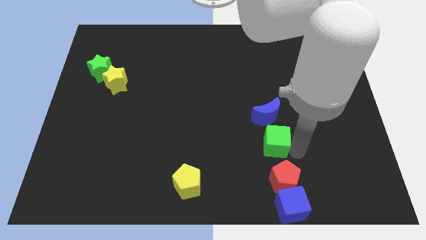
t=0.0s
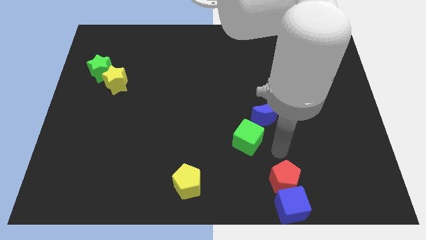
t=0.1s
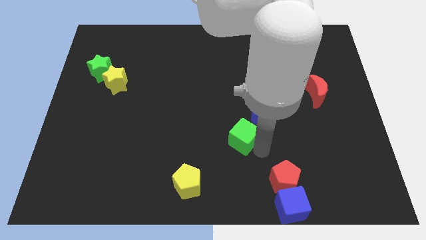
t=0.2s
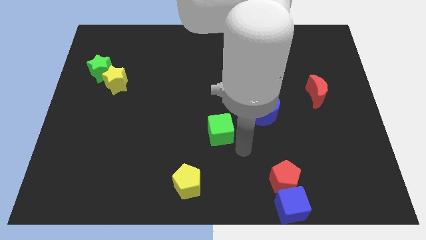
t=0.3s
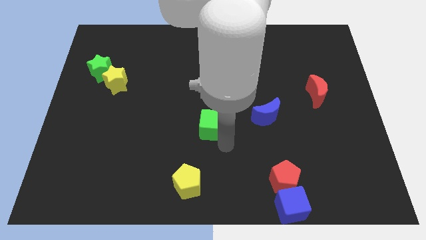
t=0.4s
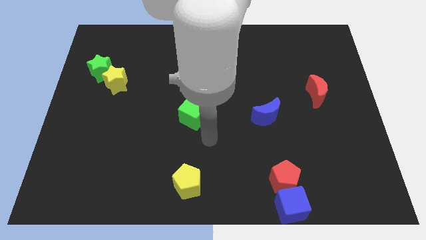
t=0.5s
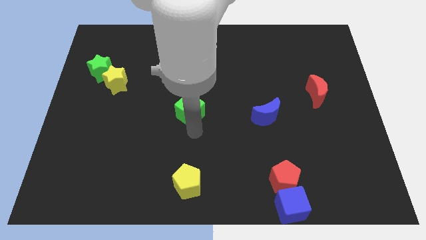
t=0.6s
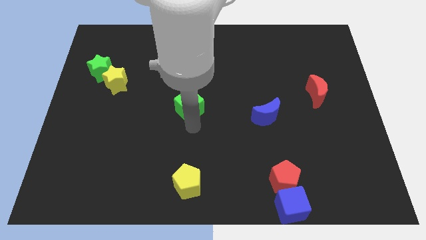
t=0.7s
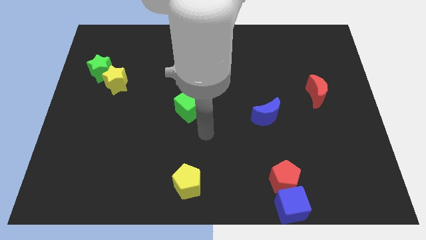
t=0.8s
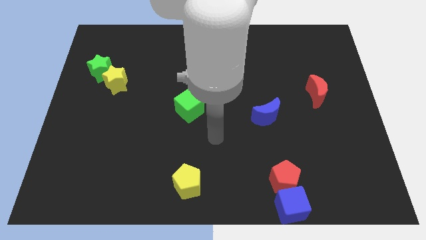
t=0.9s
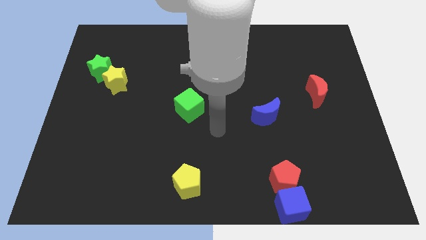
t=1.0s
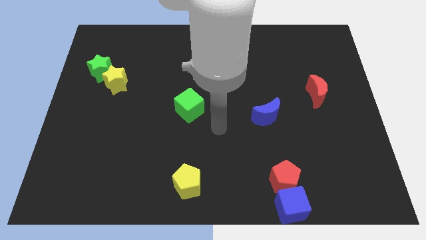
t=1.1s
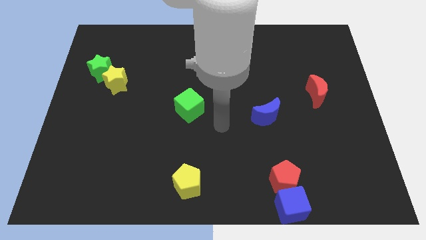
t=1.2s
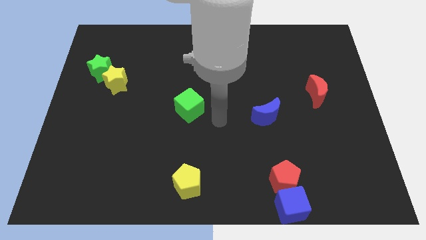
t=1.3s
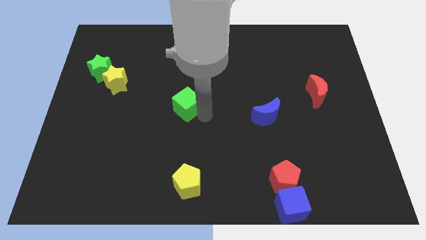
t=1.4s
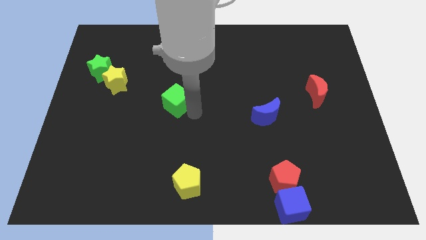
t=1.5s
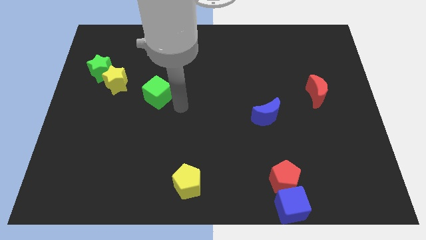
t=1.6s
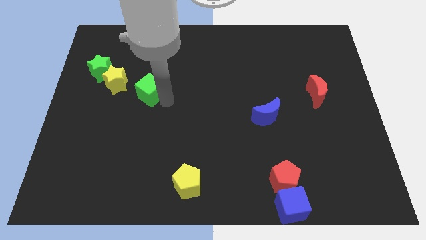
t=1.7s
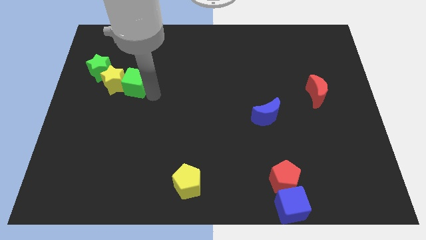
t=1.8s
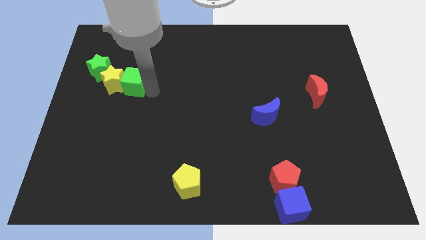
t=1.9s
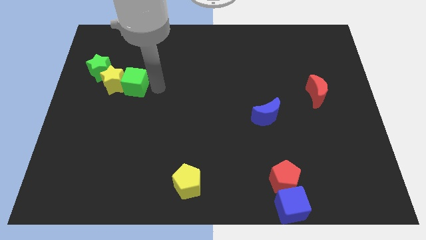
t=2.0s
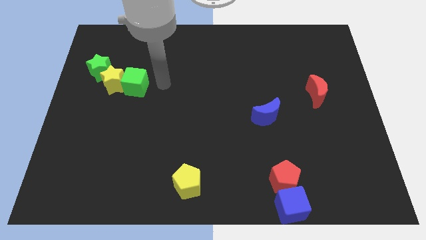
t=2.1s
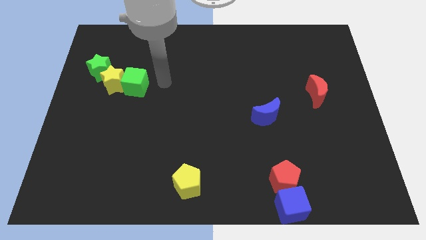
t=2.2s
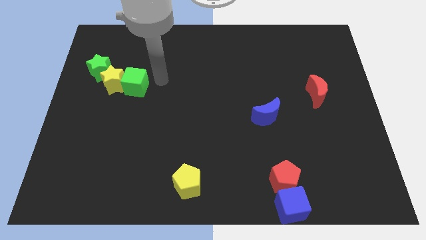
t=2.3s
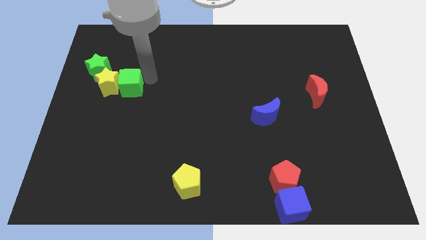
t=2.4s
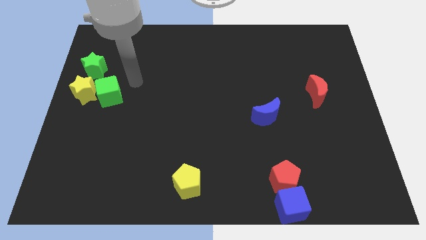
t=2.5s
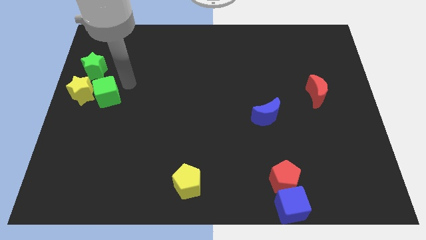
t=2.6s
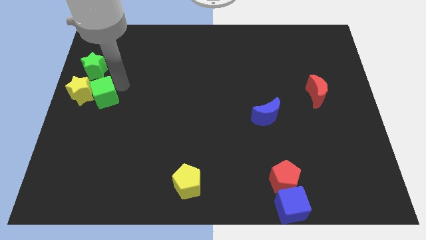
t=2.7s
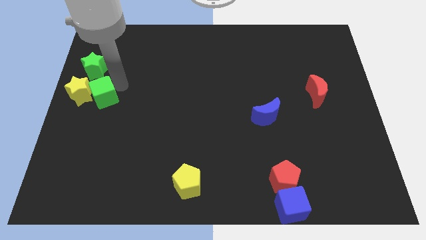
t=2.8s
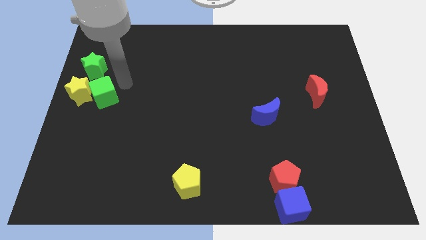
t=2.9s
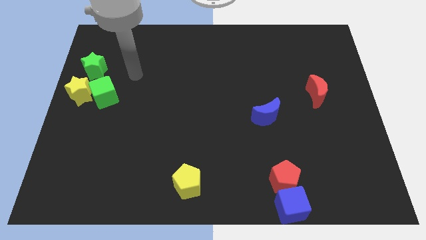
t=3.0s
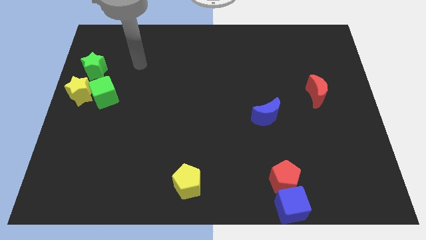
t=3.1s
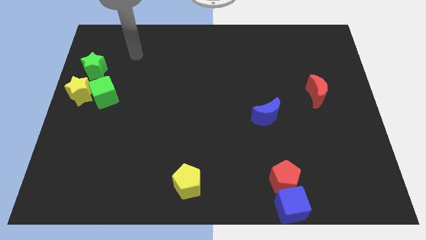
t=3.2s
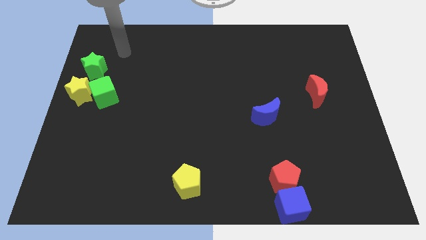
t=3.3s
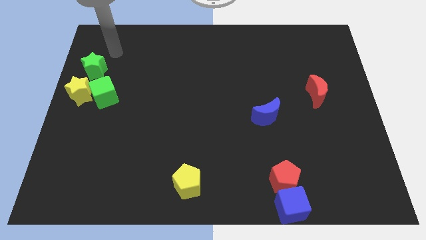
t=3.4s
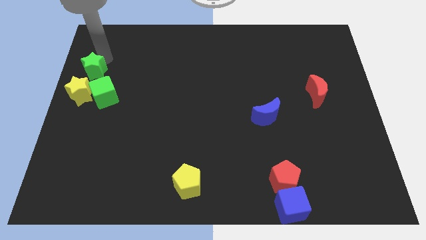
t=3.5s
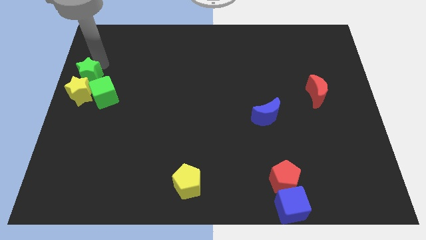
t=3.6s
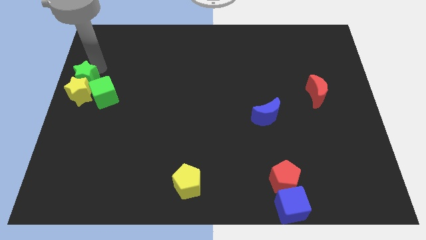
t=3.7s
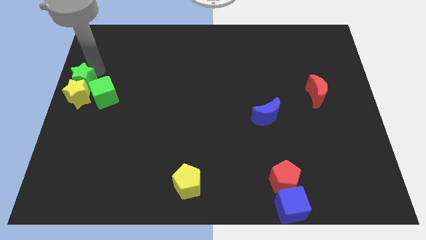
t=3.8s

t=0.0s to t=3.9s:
group up the yellow star and green blocks at the left side of the table

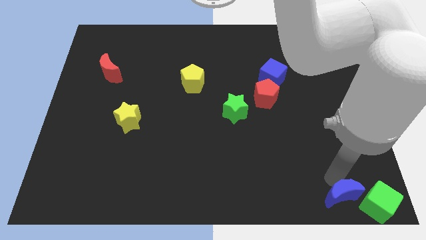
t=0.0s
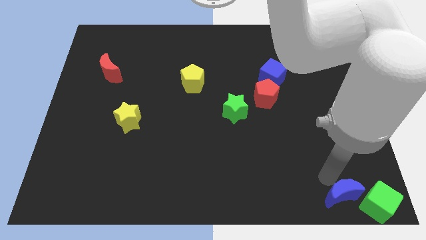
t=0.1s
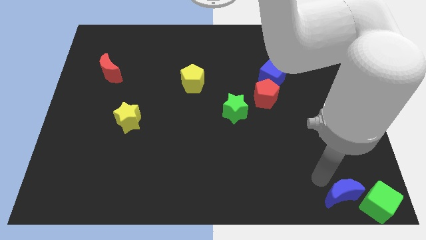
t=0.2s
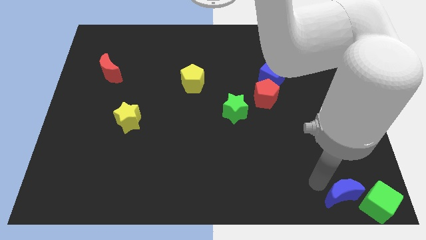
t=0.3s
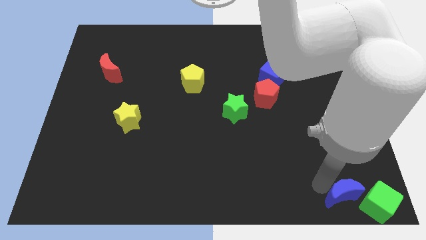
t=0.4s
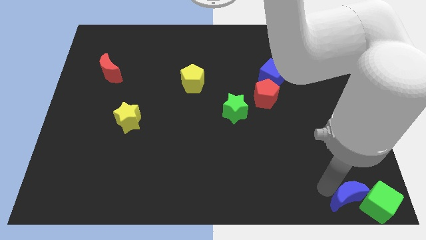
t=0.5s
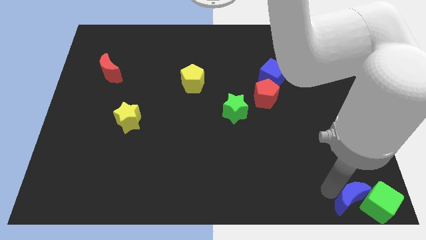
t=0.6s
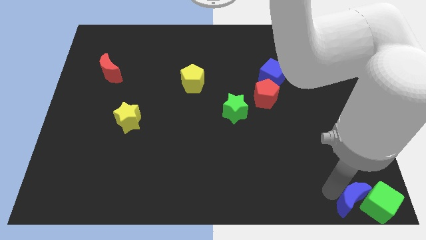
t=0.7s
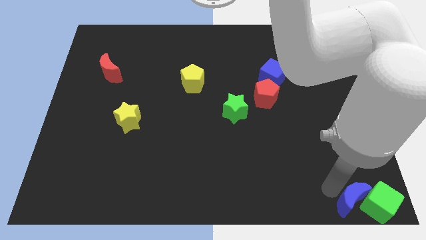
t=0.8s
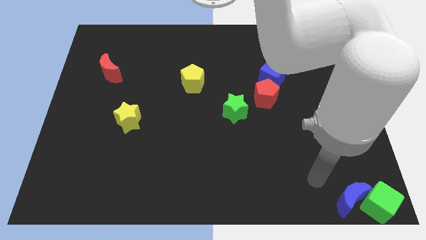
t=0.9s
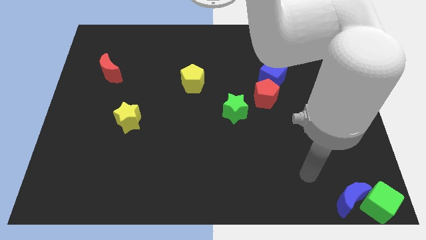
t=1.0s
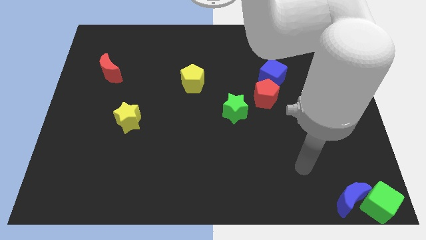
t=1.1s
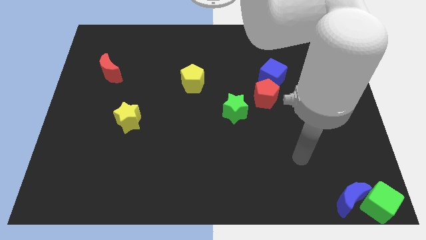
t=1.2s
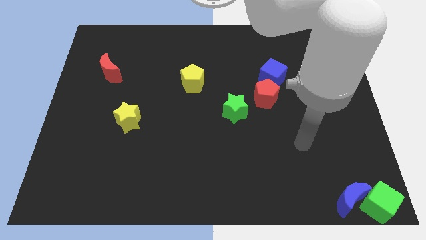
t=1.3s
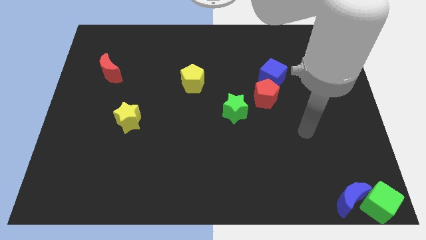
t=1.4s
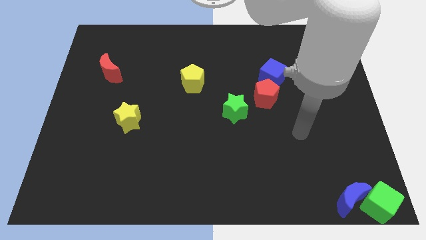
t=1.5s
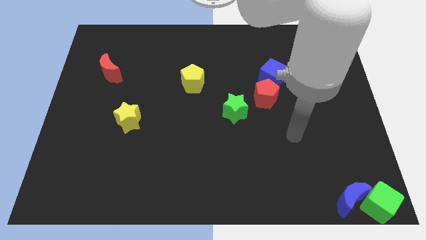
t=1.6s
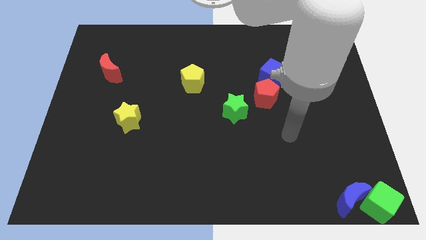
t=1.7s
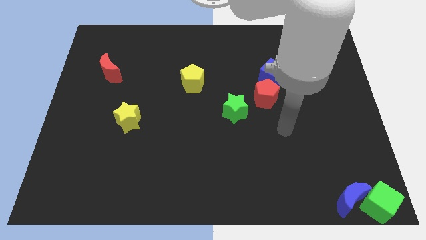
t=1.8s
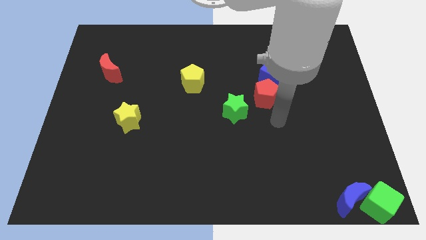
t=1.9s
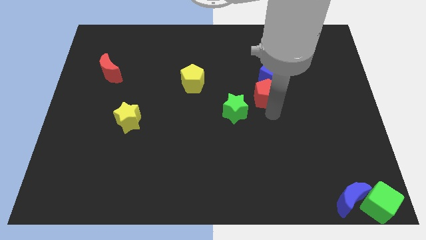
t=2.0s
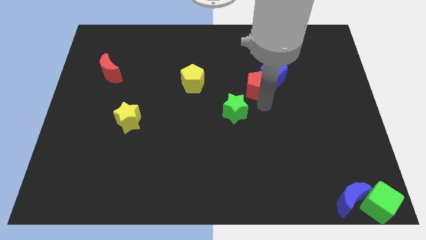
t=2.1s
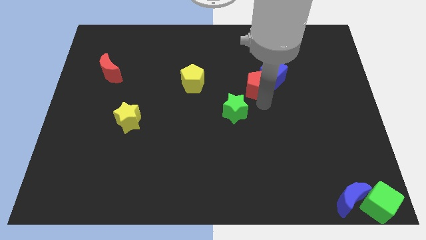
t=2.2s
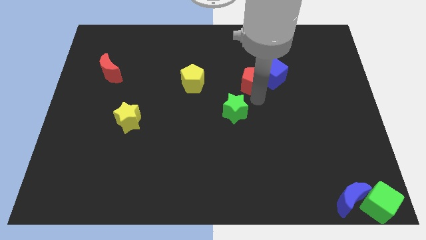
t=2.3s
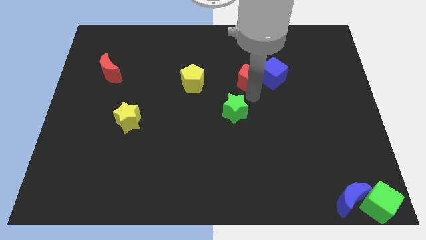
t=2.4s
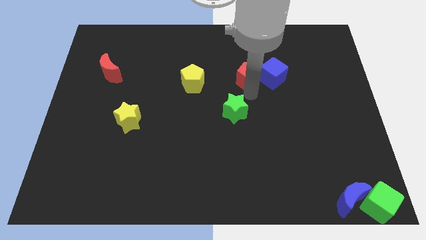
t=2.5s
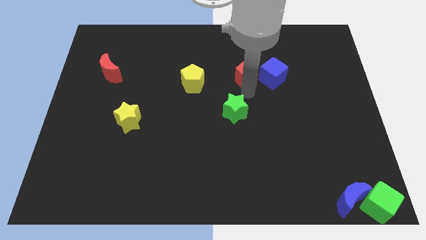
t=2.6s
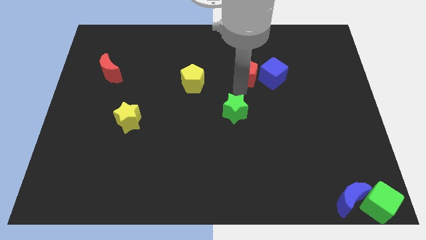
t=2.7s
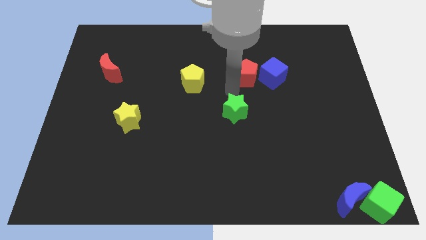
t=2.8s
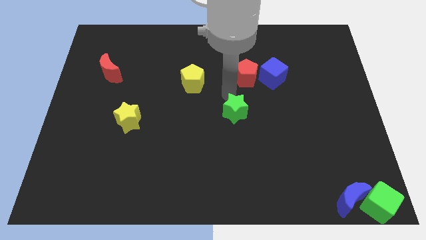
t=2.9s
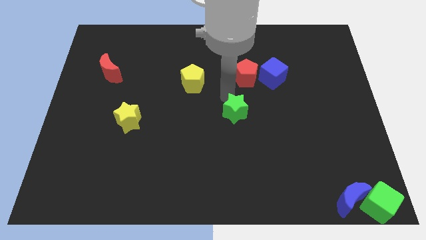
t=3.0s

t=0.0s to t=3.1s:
separate the red pentagon from green star

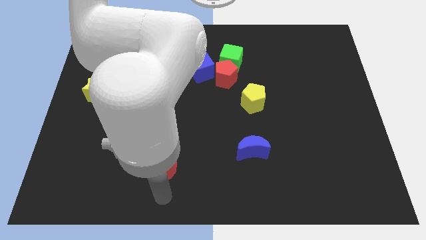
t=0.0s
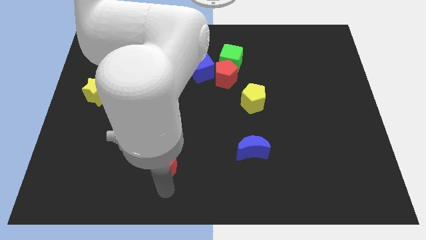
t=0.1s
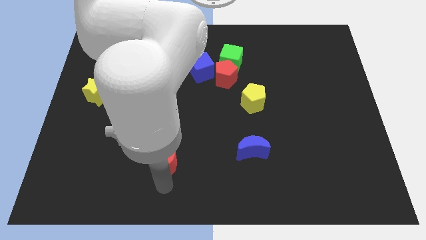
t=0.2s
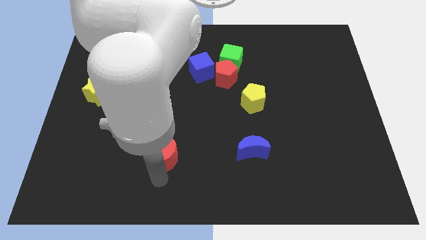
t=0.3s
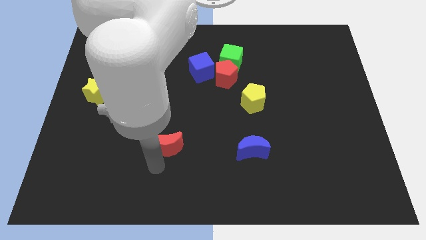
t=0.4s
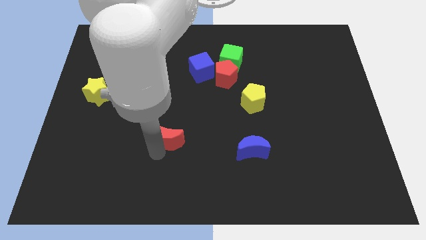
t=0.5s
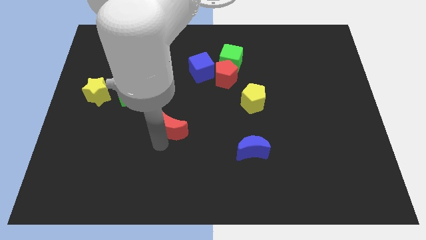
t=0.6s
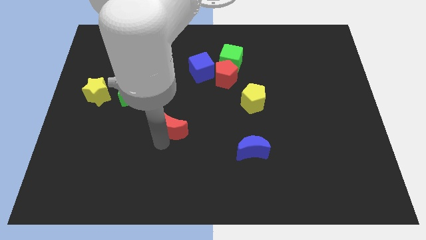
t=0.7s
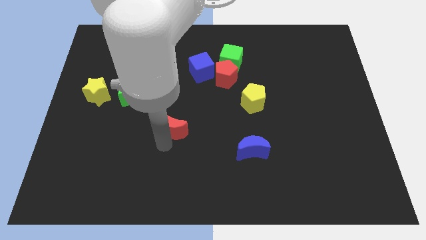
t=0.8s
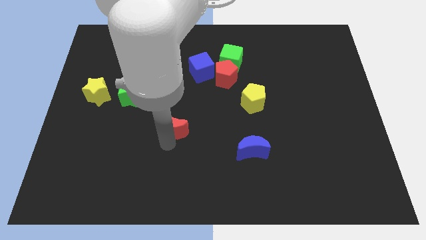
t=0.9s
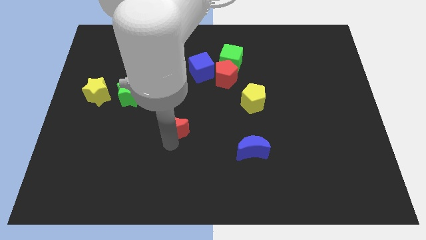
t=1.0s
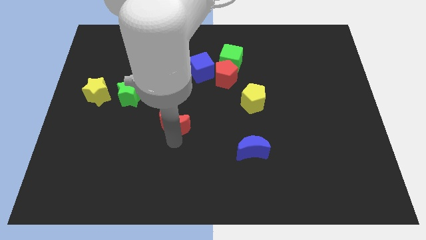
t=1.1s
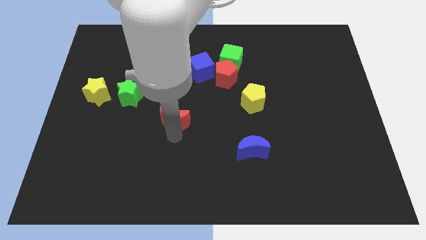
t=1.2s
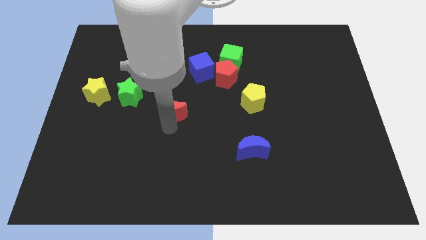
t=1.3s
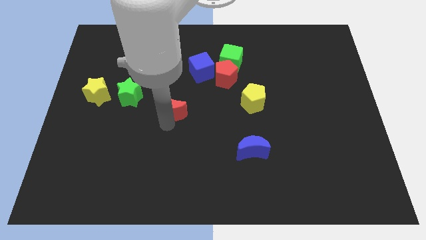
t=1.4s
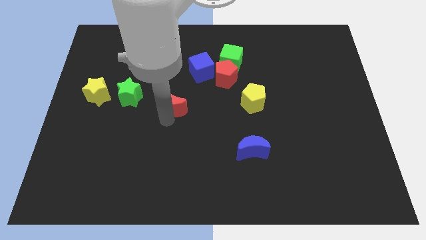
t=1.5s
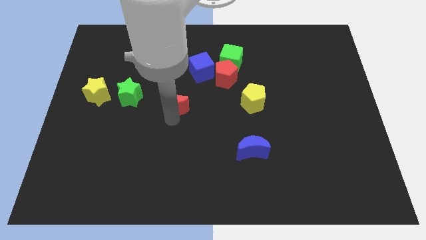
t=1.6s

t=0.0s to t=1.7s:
move the red crescent towards the center of board

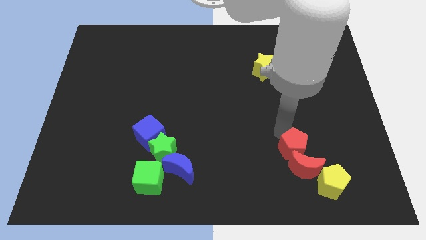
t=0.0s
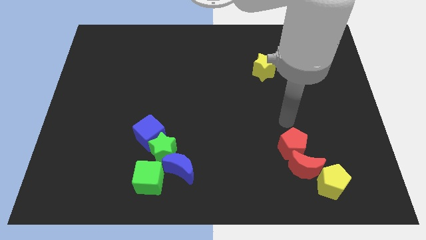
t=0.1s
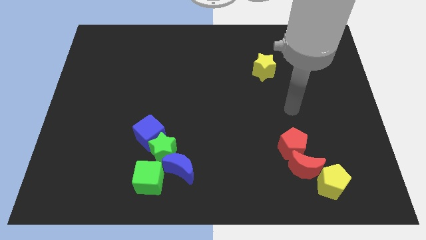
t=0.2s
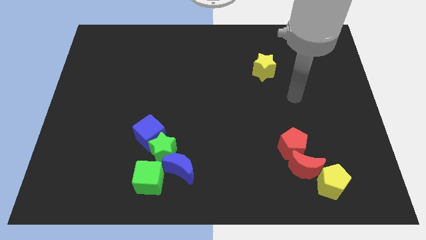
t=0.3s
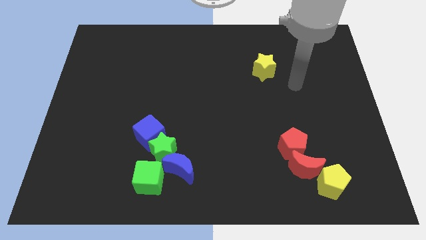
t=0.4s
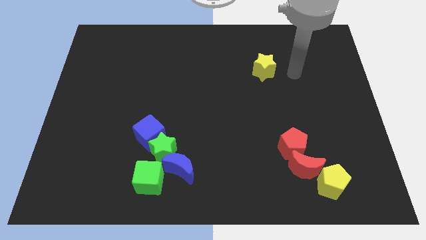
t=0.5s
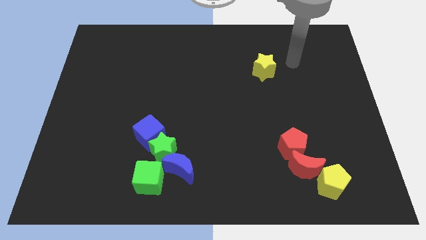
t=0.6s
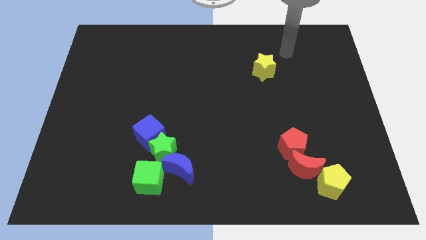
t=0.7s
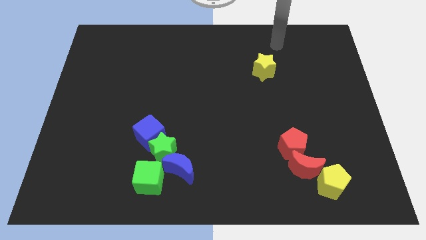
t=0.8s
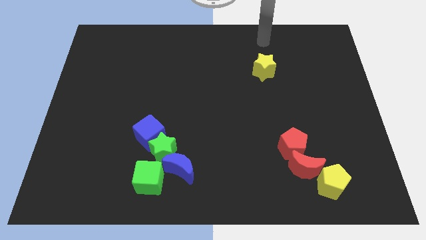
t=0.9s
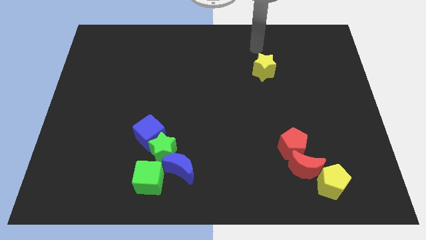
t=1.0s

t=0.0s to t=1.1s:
point the arm above the yellow star
